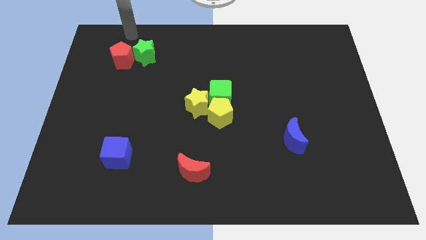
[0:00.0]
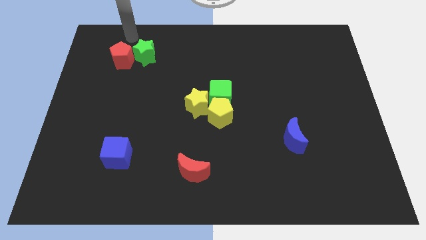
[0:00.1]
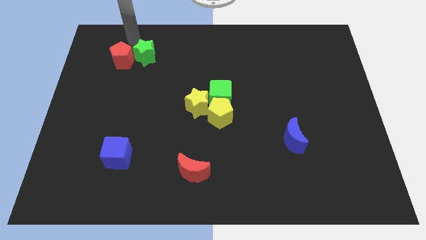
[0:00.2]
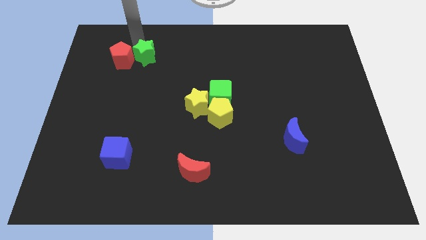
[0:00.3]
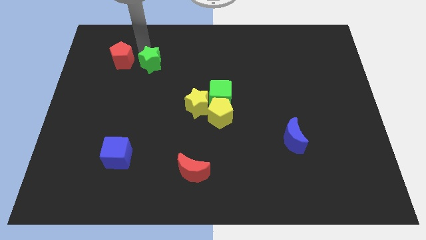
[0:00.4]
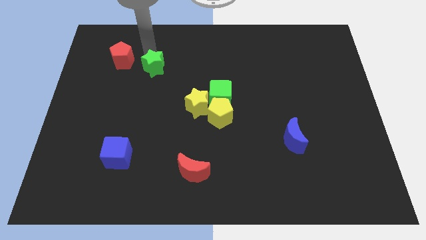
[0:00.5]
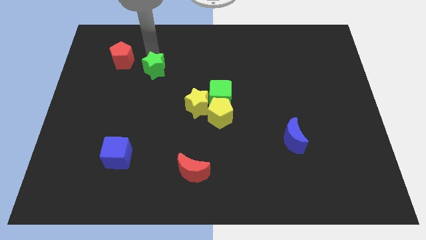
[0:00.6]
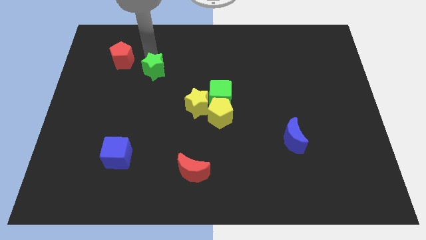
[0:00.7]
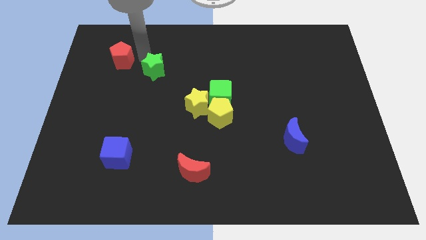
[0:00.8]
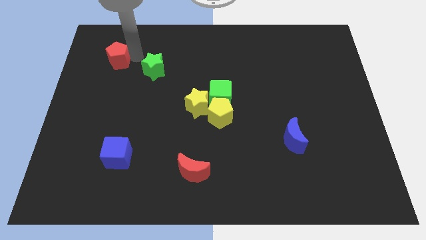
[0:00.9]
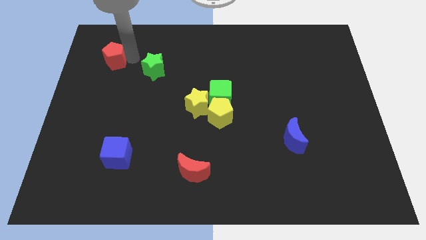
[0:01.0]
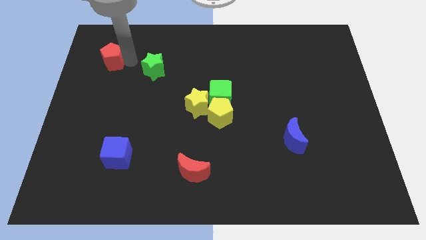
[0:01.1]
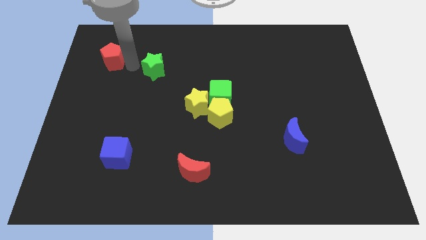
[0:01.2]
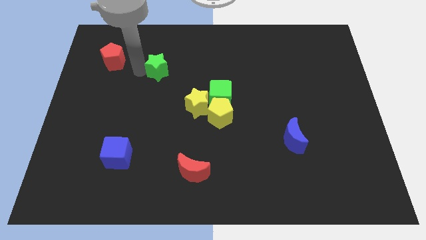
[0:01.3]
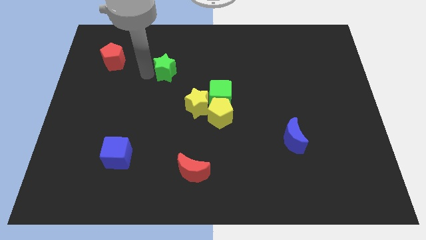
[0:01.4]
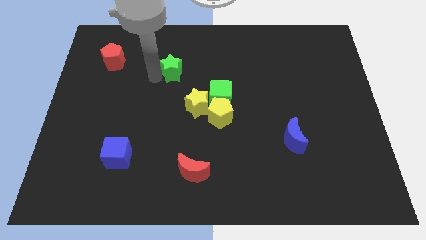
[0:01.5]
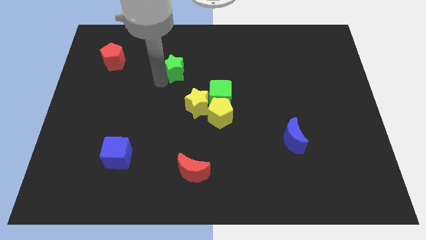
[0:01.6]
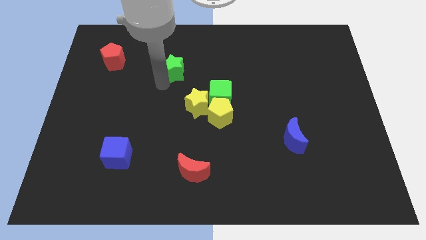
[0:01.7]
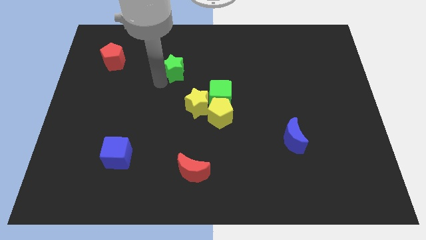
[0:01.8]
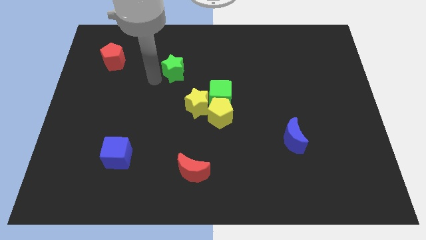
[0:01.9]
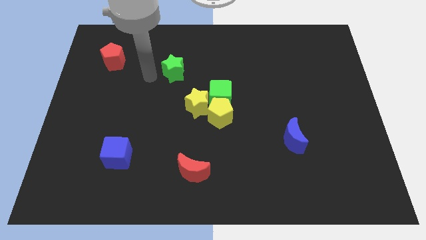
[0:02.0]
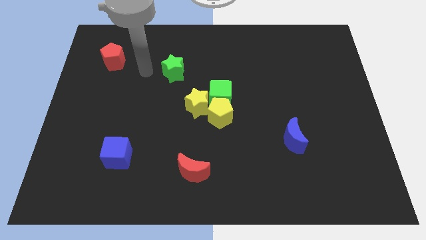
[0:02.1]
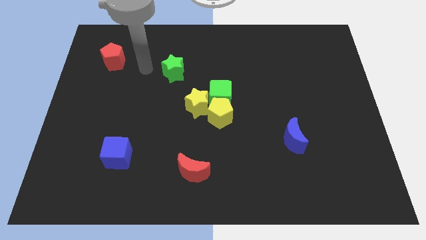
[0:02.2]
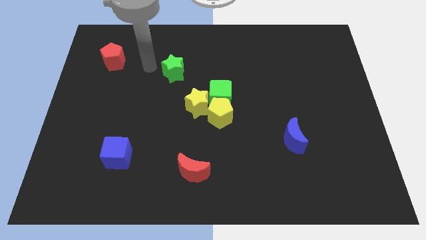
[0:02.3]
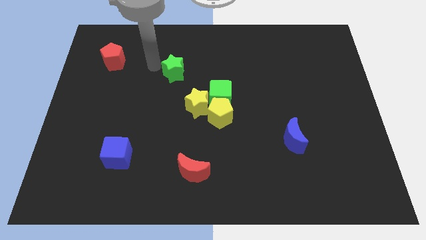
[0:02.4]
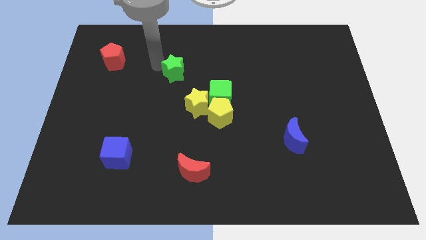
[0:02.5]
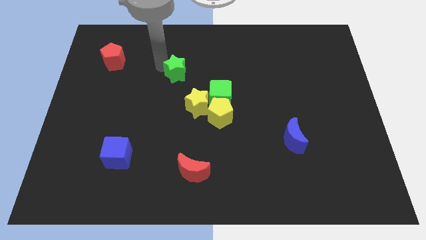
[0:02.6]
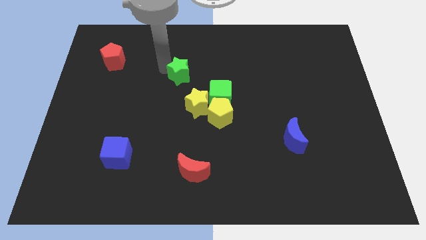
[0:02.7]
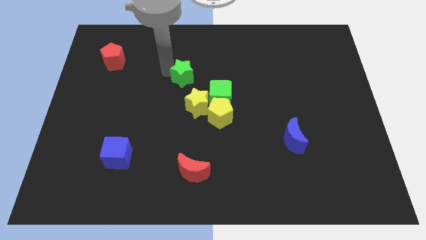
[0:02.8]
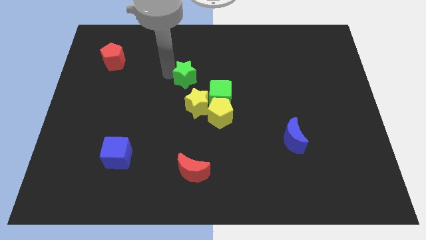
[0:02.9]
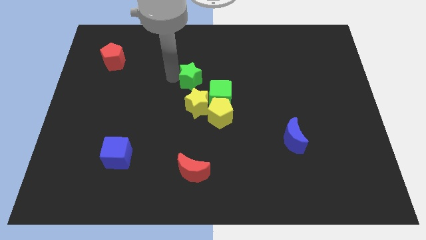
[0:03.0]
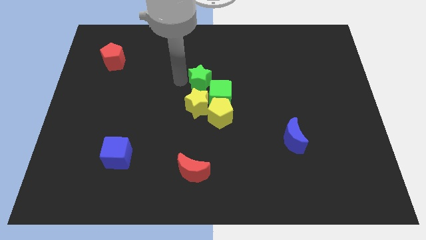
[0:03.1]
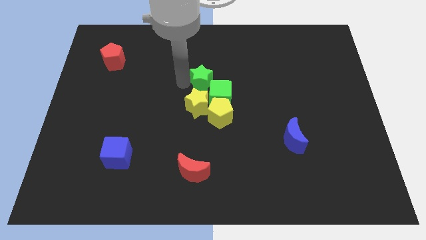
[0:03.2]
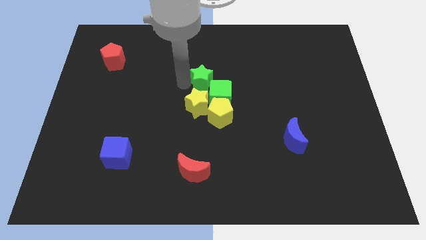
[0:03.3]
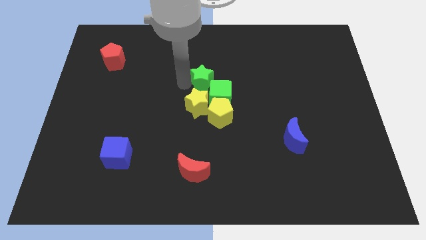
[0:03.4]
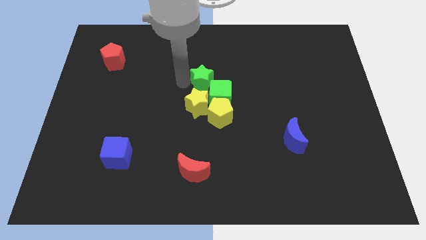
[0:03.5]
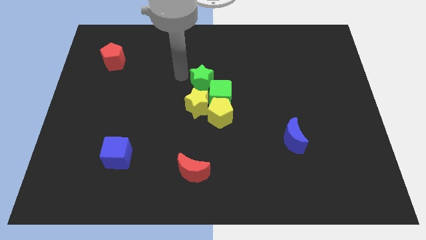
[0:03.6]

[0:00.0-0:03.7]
move the green star diagonally left to the green cube

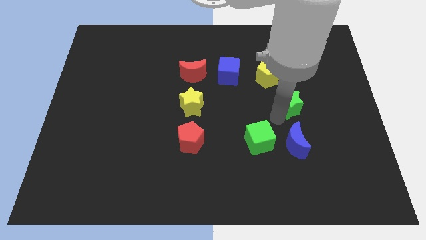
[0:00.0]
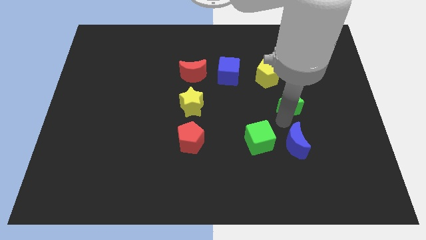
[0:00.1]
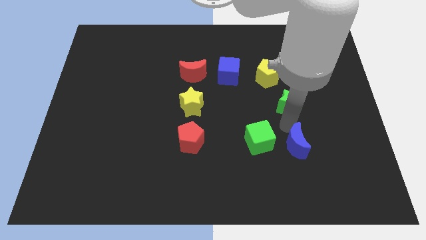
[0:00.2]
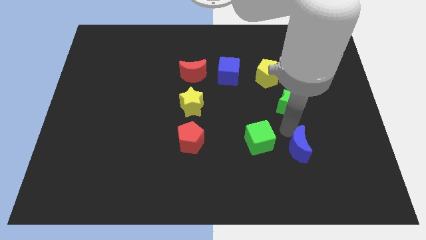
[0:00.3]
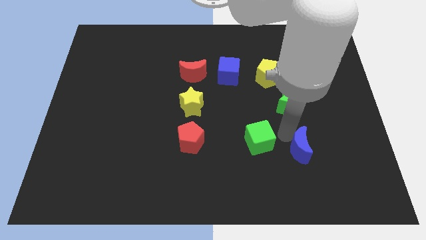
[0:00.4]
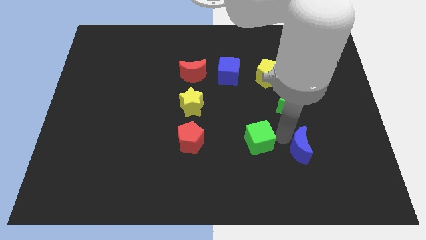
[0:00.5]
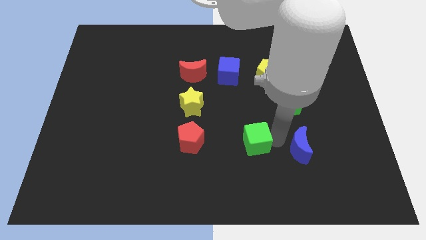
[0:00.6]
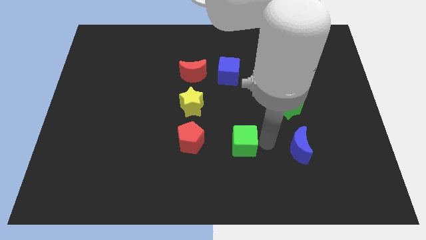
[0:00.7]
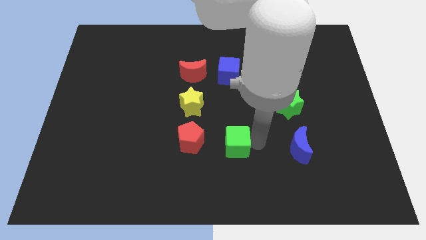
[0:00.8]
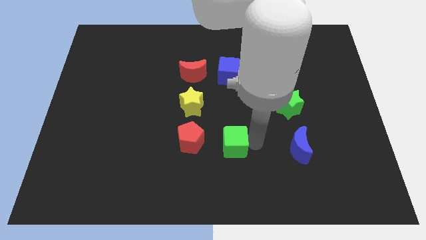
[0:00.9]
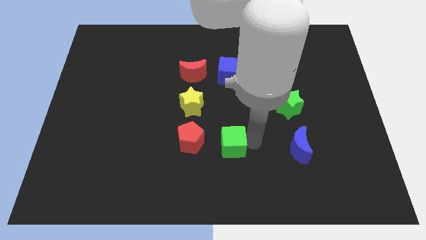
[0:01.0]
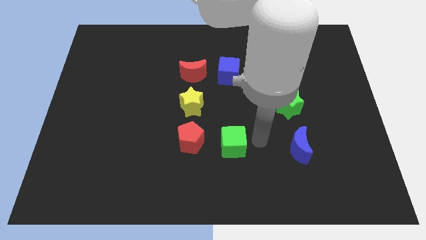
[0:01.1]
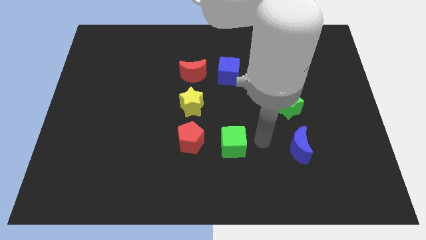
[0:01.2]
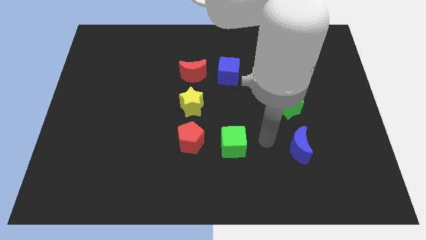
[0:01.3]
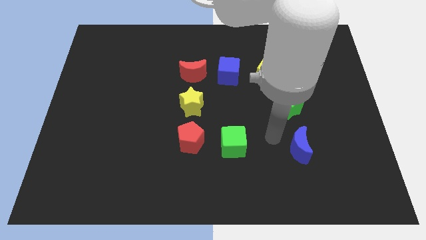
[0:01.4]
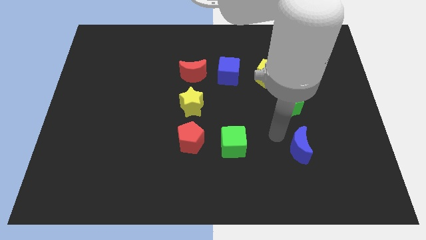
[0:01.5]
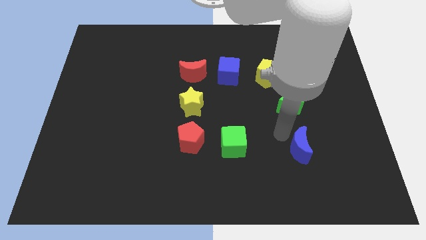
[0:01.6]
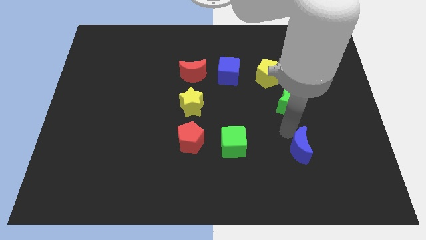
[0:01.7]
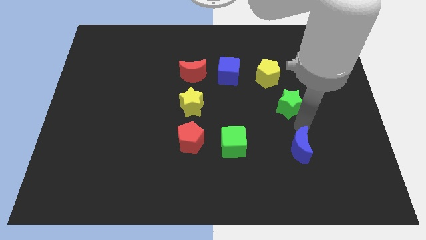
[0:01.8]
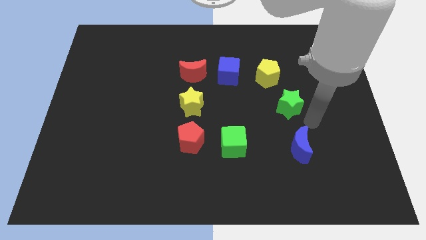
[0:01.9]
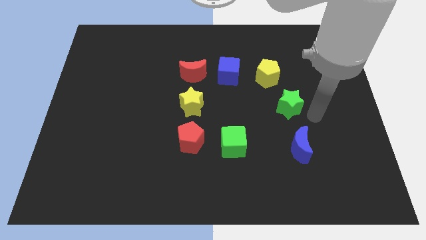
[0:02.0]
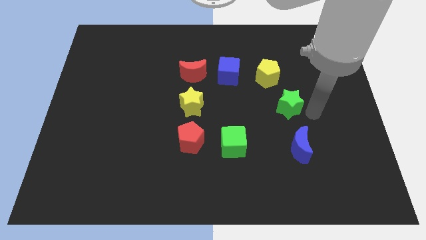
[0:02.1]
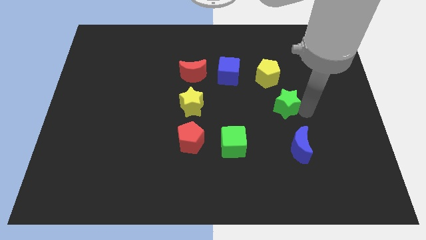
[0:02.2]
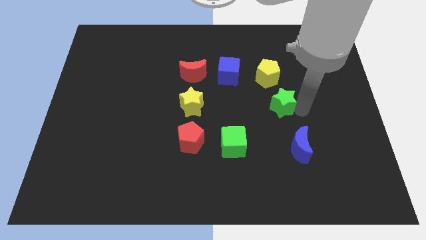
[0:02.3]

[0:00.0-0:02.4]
separate the green cube and blue moon

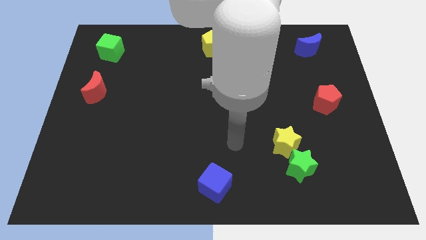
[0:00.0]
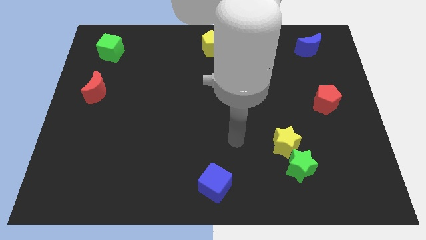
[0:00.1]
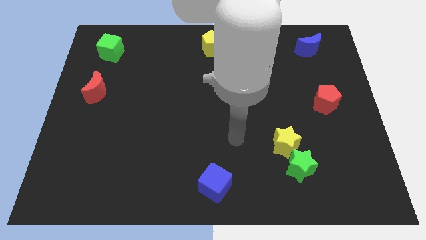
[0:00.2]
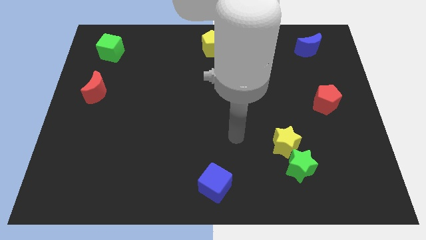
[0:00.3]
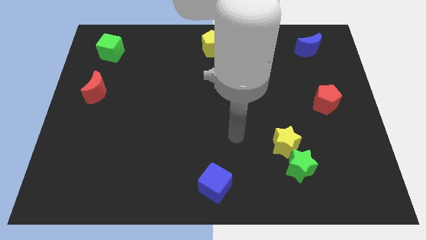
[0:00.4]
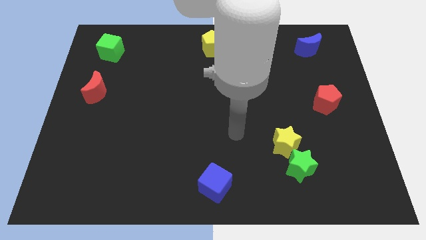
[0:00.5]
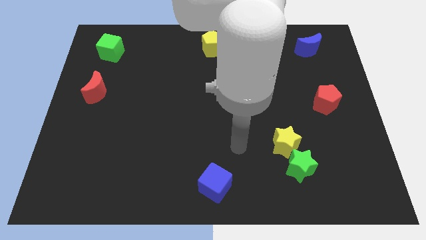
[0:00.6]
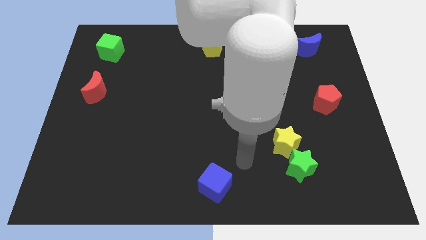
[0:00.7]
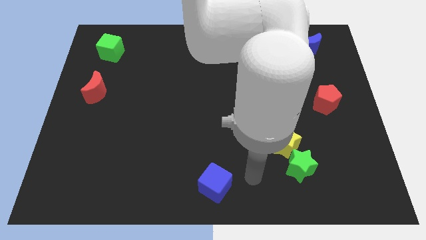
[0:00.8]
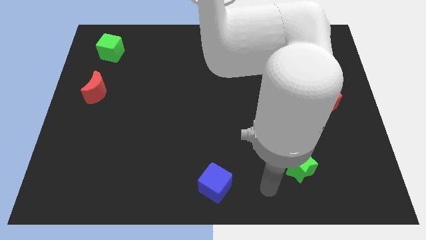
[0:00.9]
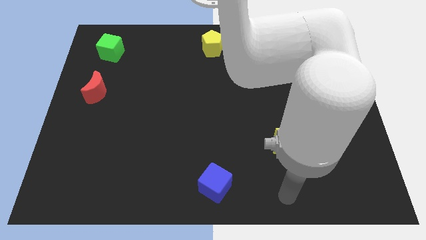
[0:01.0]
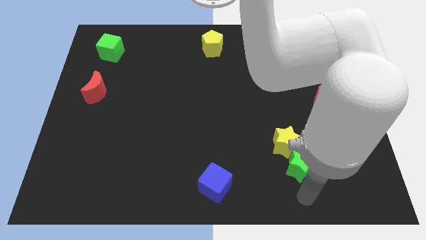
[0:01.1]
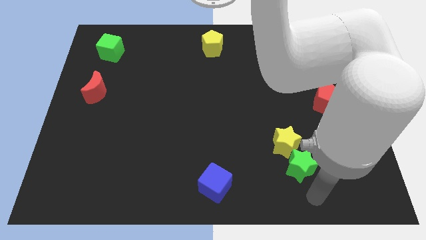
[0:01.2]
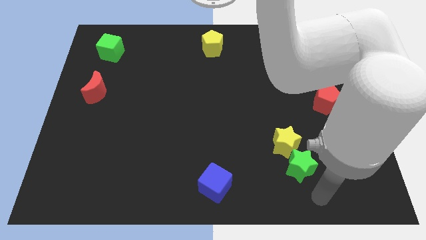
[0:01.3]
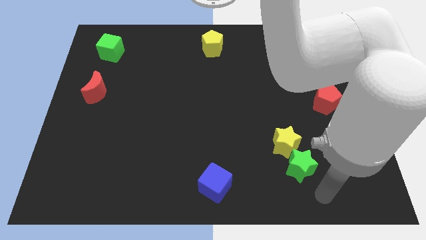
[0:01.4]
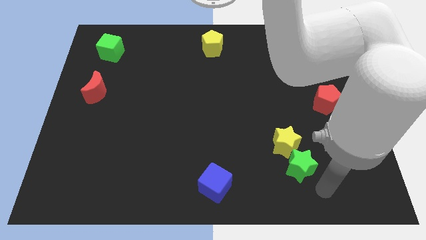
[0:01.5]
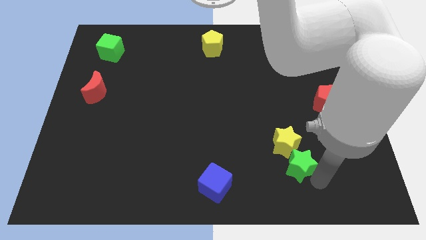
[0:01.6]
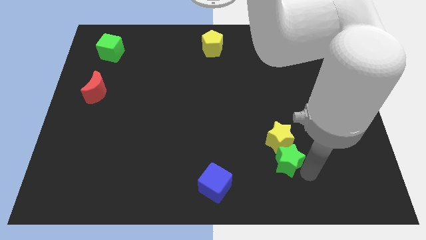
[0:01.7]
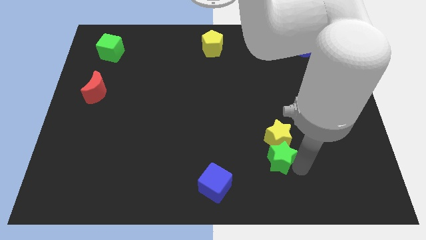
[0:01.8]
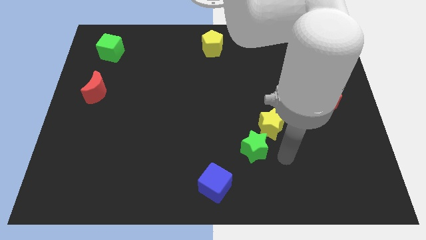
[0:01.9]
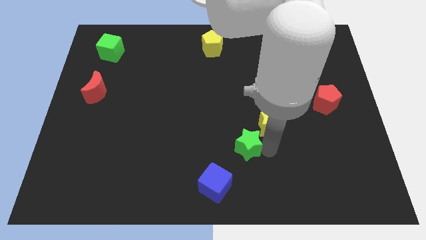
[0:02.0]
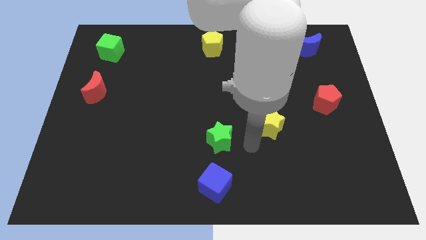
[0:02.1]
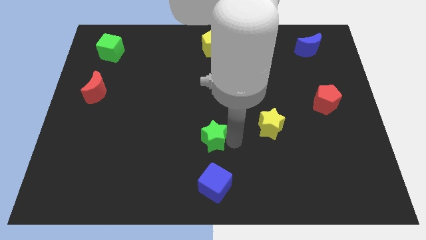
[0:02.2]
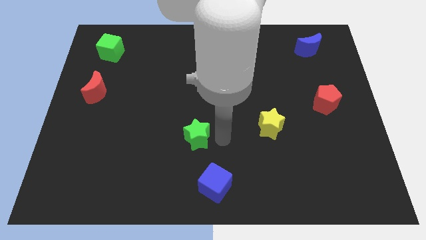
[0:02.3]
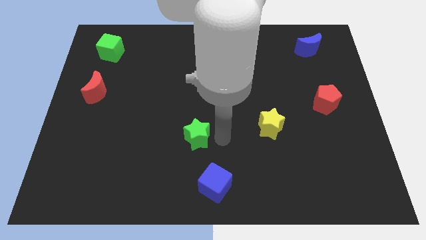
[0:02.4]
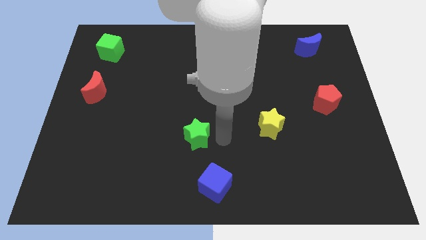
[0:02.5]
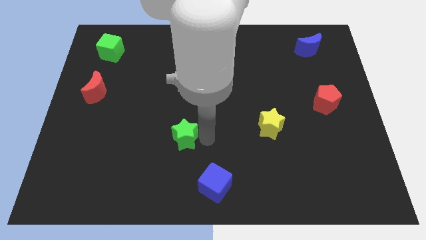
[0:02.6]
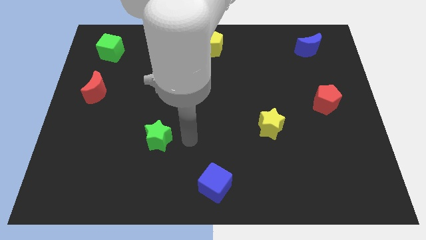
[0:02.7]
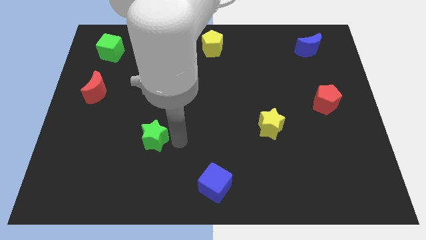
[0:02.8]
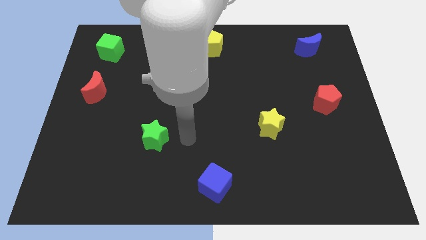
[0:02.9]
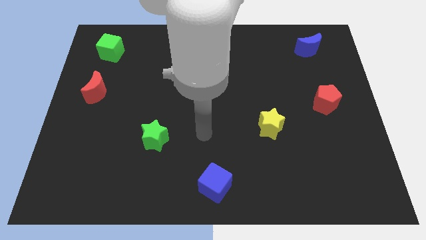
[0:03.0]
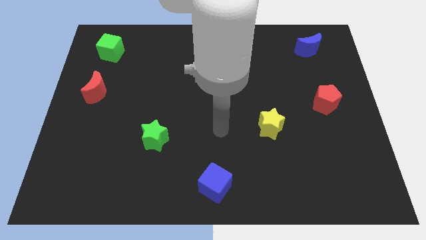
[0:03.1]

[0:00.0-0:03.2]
push green star towards left side of the board
